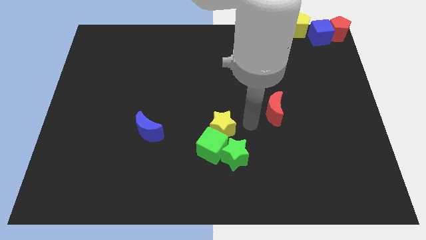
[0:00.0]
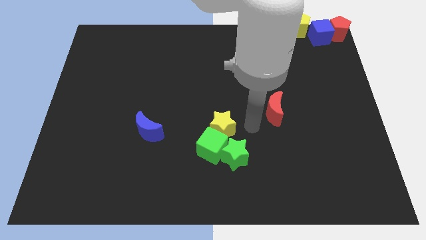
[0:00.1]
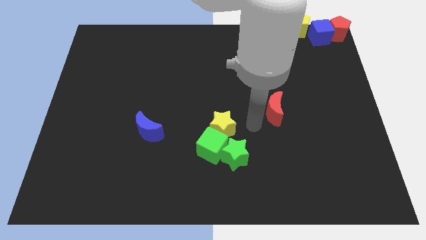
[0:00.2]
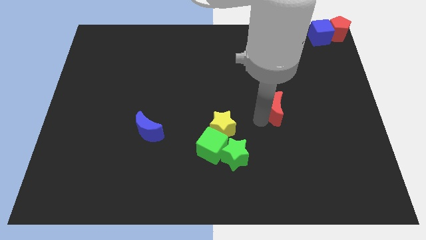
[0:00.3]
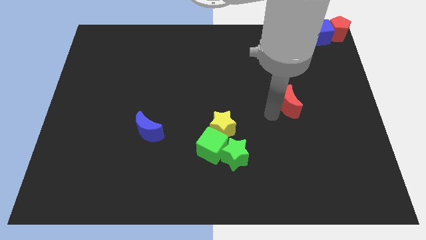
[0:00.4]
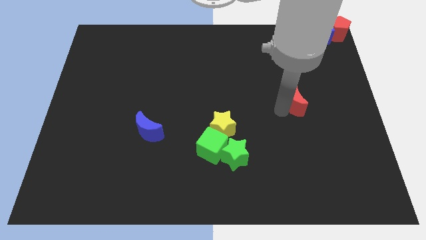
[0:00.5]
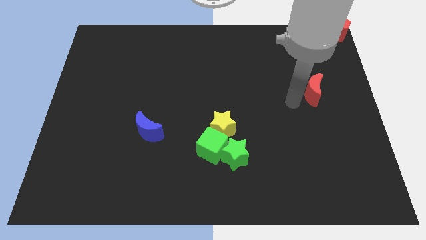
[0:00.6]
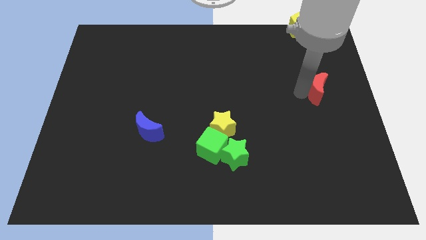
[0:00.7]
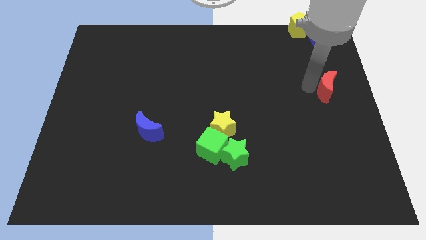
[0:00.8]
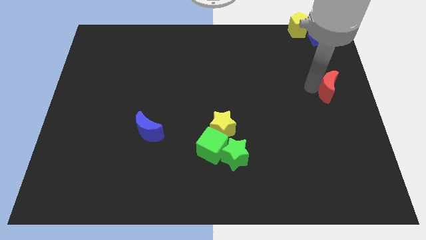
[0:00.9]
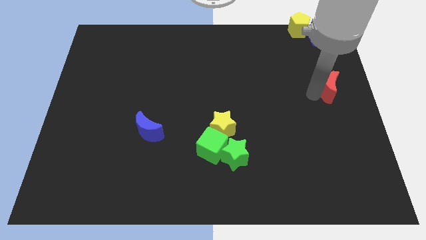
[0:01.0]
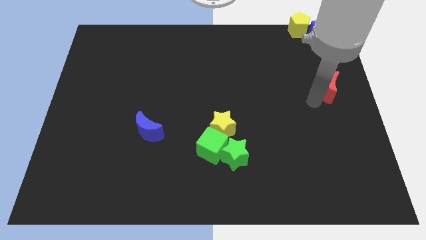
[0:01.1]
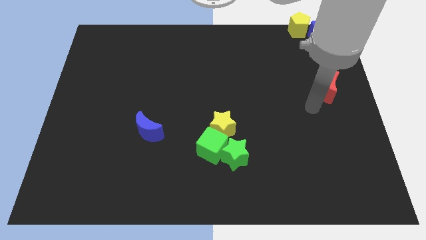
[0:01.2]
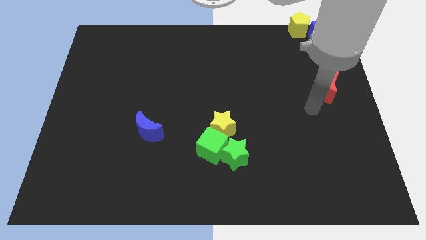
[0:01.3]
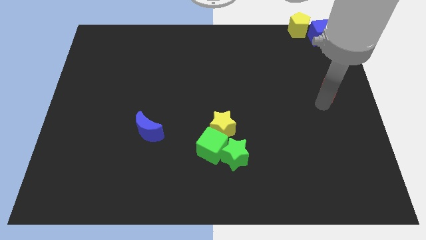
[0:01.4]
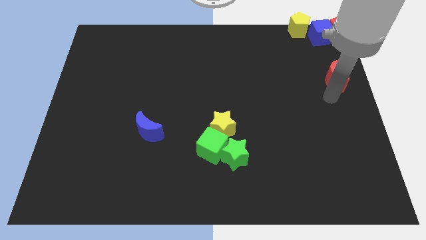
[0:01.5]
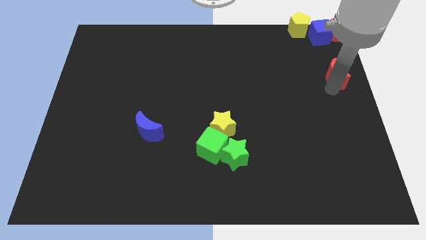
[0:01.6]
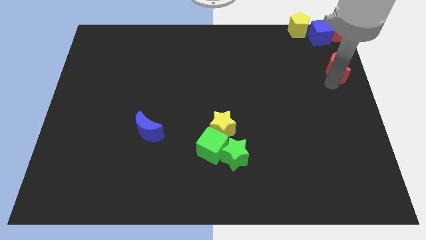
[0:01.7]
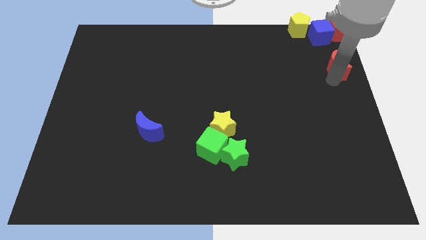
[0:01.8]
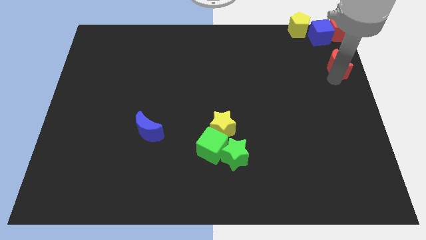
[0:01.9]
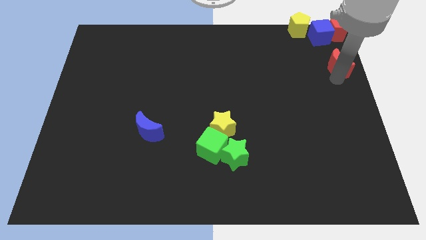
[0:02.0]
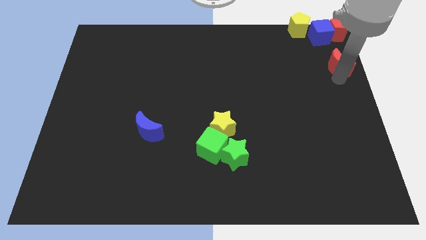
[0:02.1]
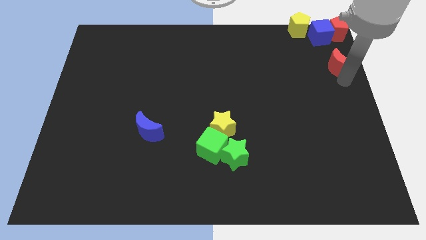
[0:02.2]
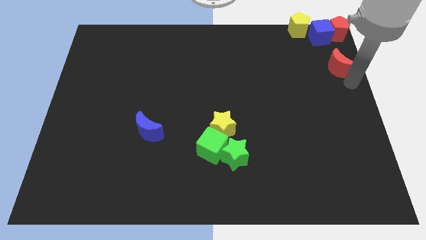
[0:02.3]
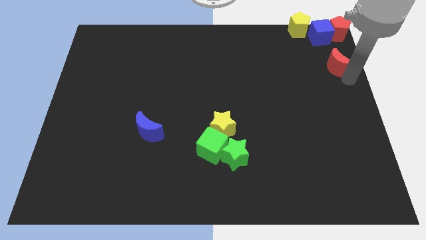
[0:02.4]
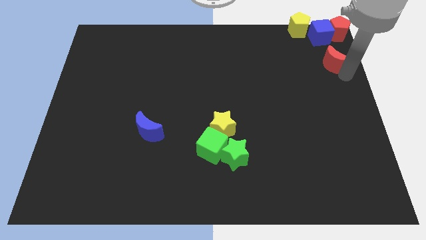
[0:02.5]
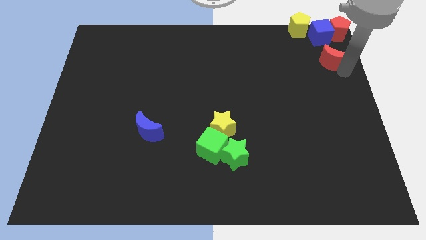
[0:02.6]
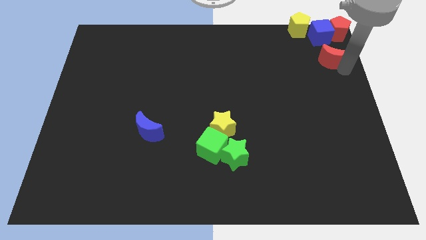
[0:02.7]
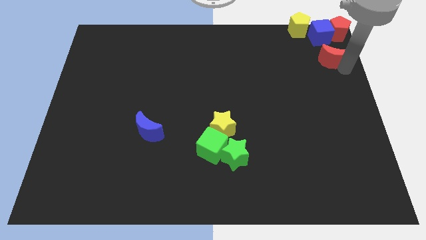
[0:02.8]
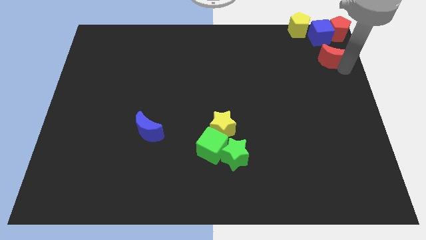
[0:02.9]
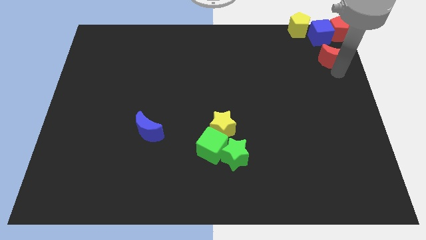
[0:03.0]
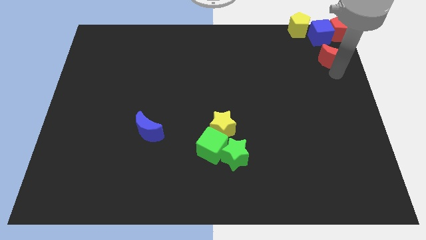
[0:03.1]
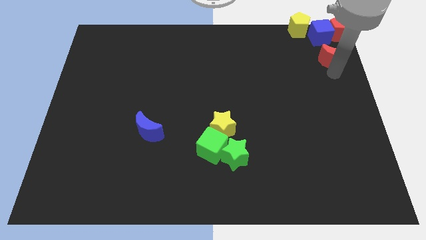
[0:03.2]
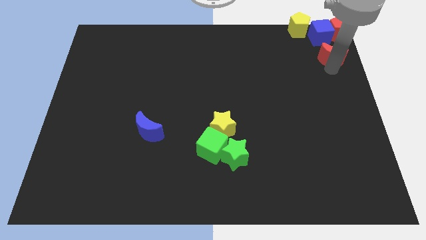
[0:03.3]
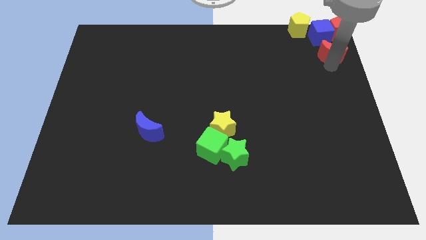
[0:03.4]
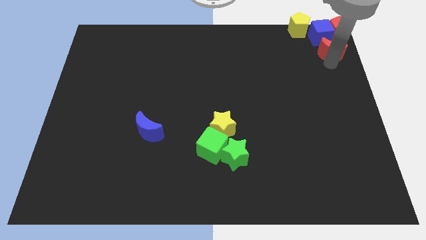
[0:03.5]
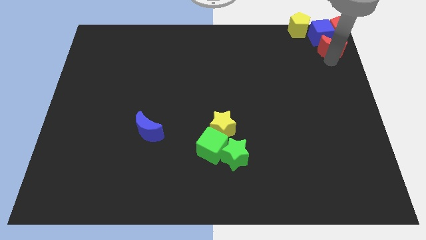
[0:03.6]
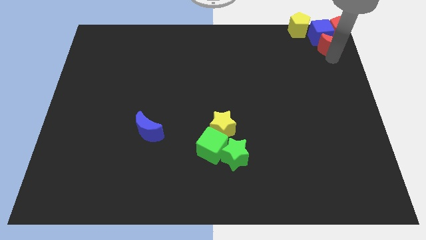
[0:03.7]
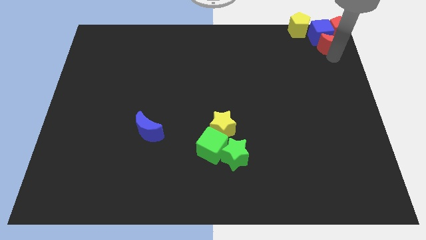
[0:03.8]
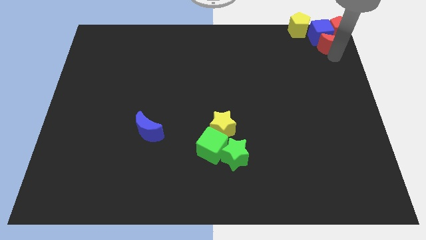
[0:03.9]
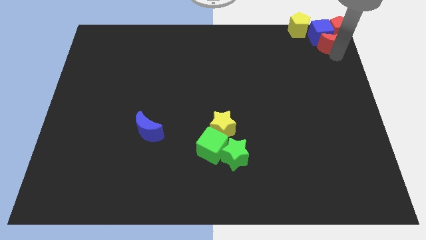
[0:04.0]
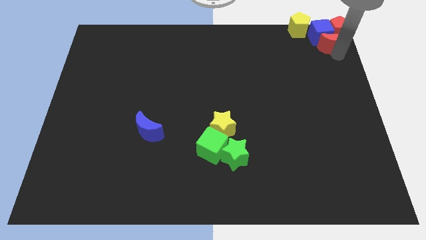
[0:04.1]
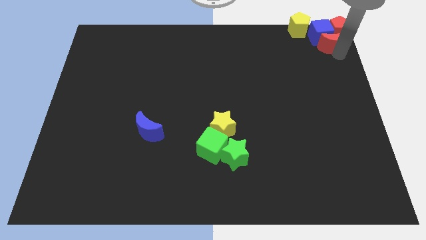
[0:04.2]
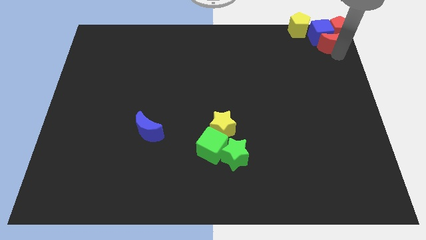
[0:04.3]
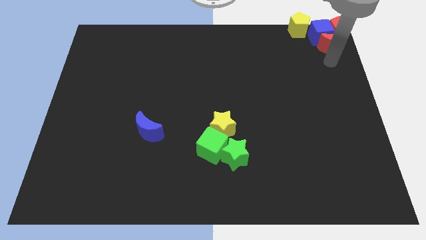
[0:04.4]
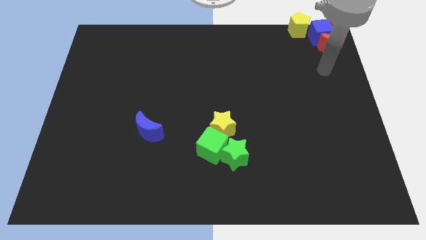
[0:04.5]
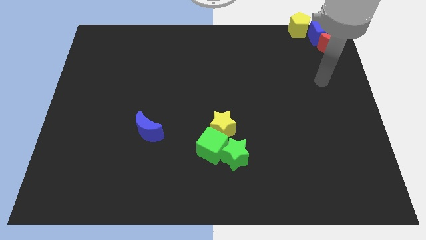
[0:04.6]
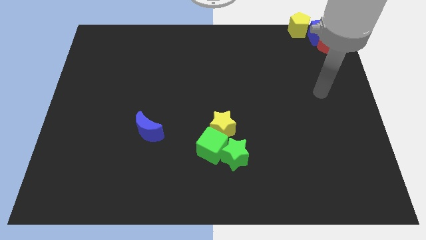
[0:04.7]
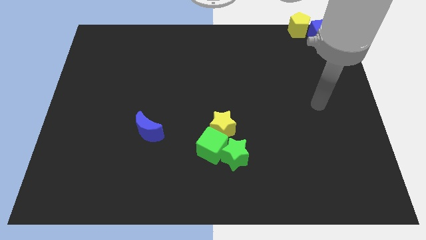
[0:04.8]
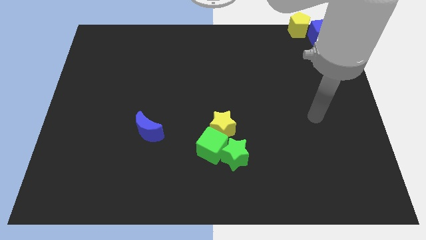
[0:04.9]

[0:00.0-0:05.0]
push the red crescent into the blue cube

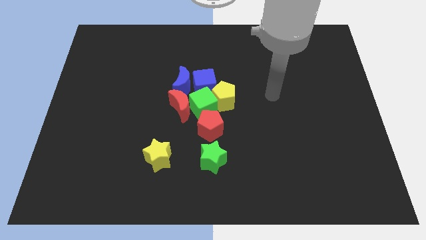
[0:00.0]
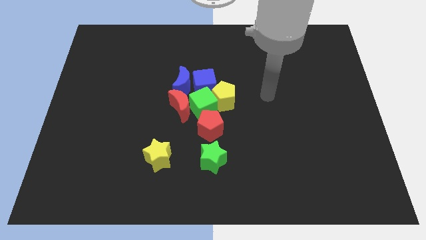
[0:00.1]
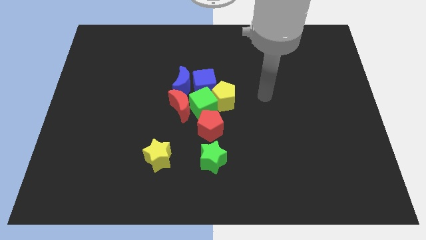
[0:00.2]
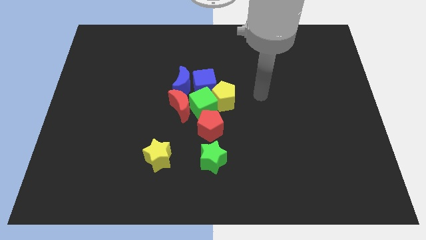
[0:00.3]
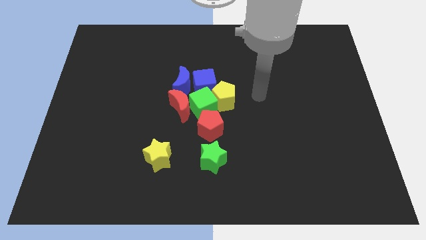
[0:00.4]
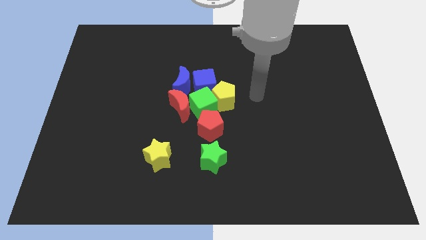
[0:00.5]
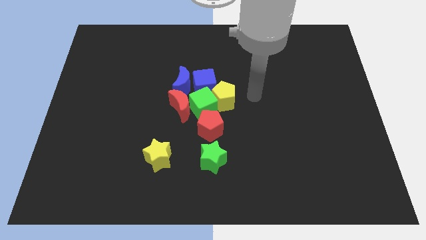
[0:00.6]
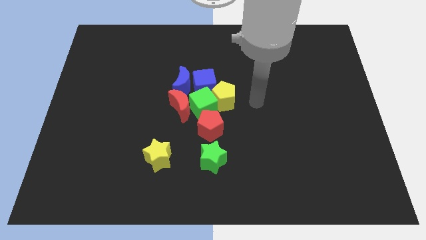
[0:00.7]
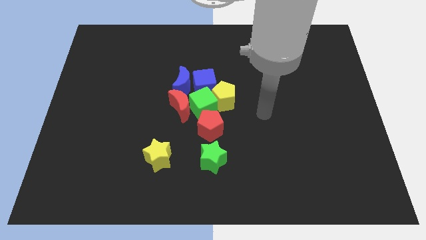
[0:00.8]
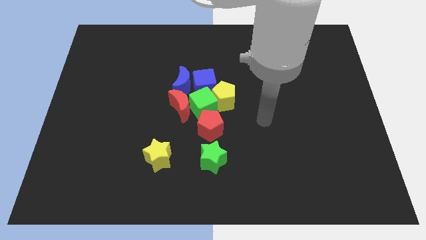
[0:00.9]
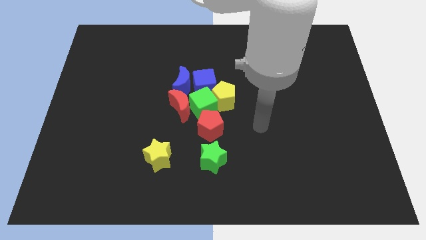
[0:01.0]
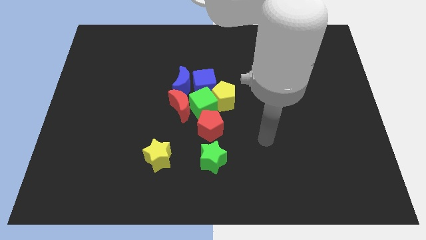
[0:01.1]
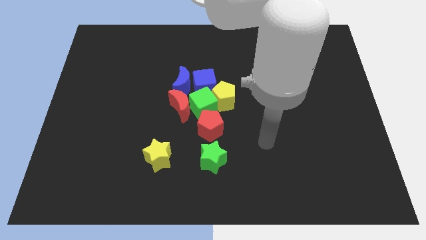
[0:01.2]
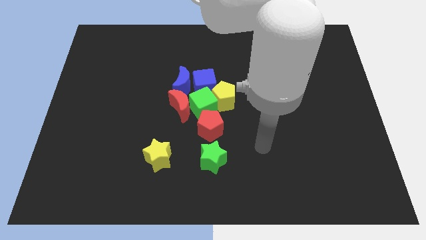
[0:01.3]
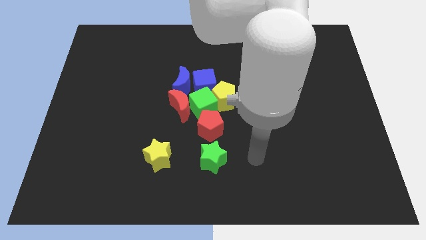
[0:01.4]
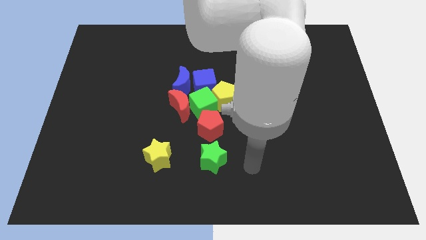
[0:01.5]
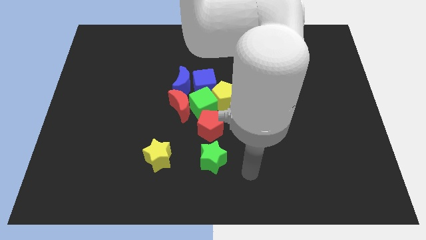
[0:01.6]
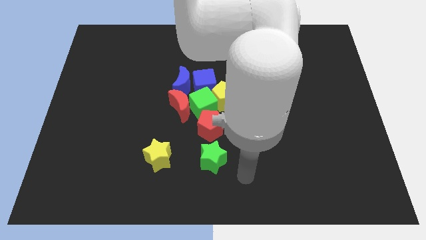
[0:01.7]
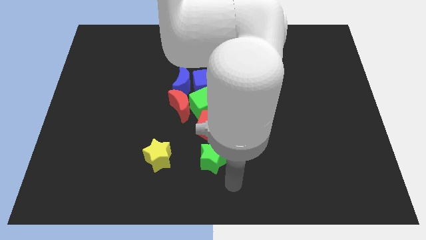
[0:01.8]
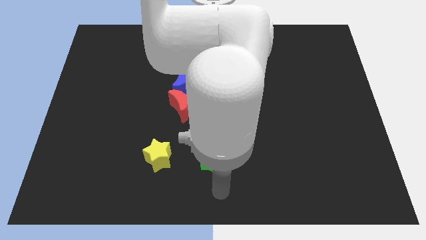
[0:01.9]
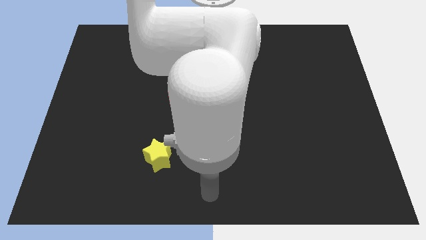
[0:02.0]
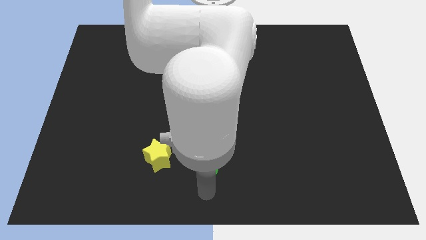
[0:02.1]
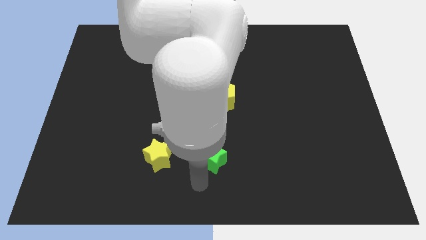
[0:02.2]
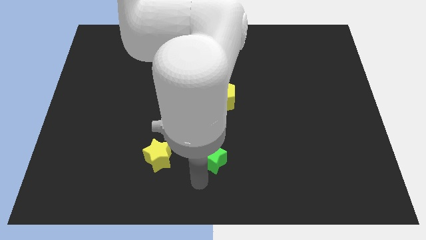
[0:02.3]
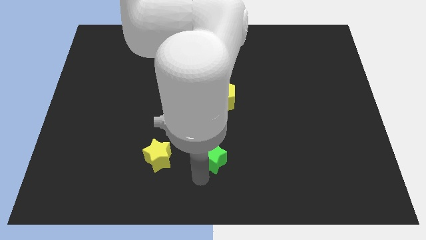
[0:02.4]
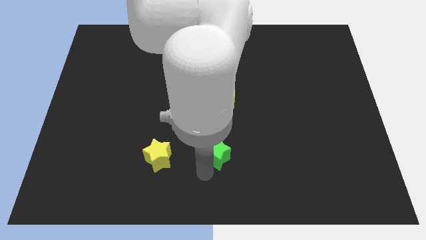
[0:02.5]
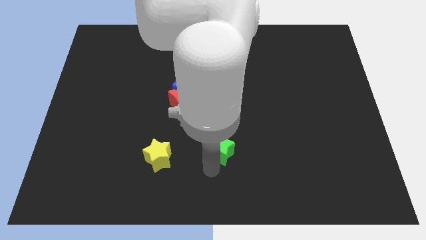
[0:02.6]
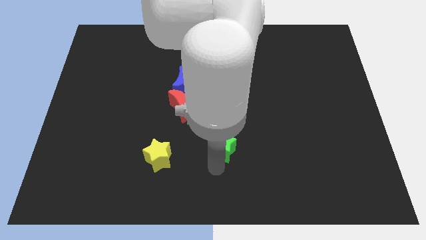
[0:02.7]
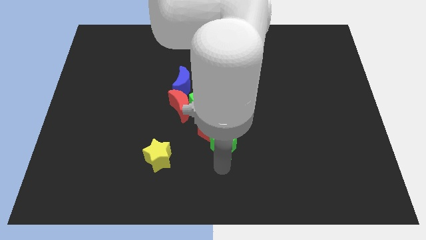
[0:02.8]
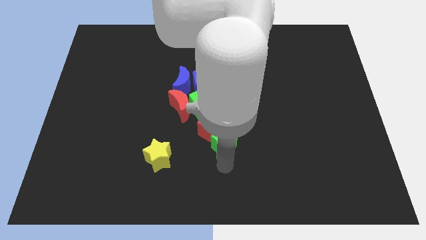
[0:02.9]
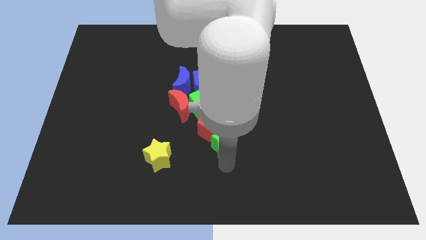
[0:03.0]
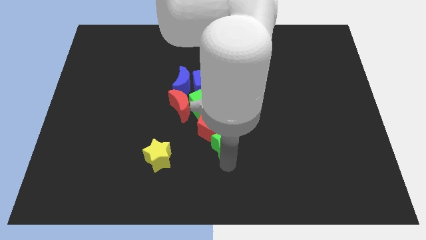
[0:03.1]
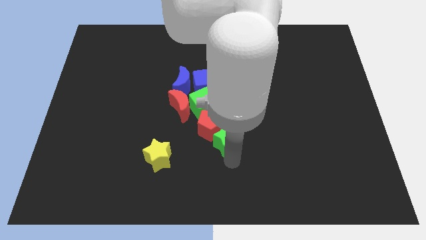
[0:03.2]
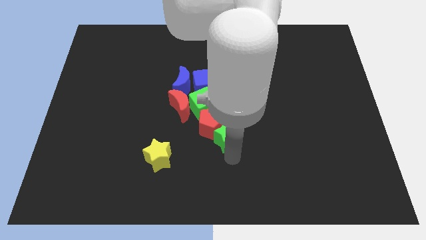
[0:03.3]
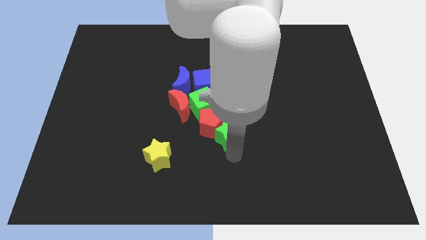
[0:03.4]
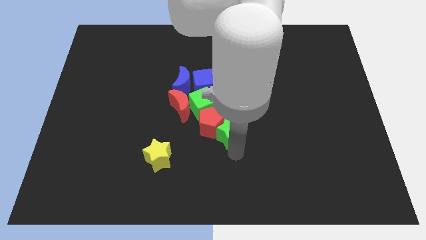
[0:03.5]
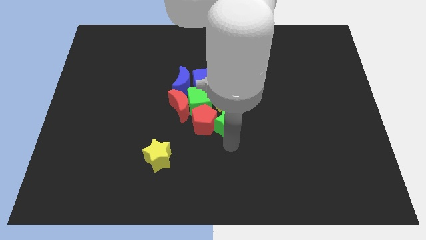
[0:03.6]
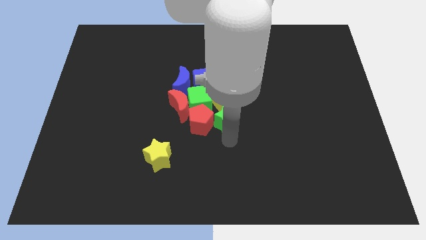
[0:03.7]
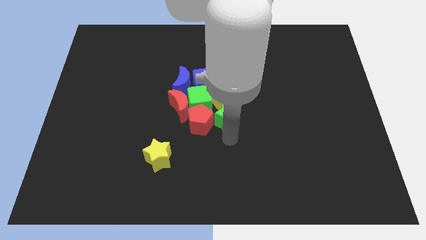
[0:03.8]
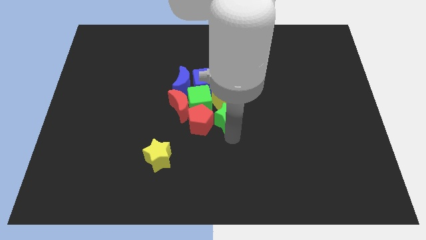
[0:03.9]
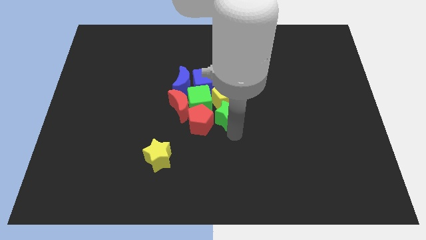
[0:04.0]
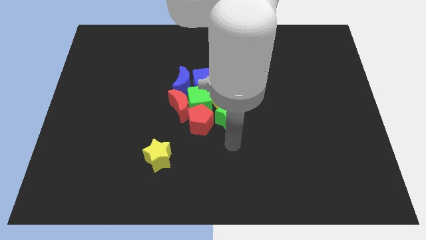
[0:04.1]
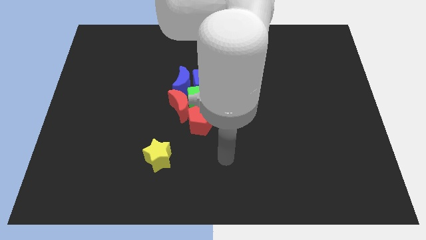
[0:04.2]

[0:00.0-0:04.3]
place green star to the right of red pentagon
